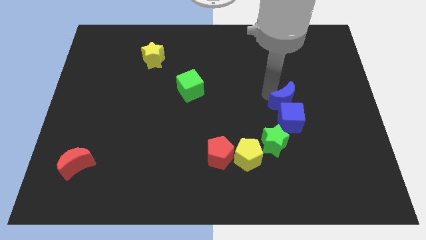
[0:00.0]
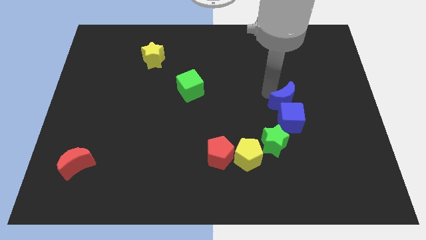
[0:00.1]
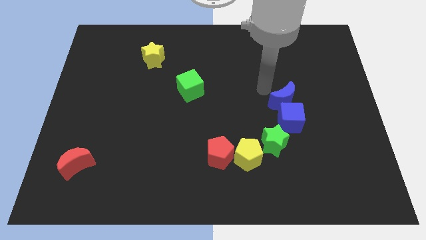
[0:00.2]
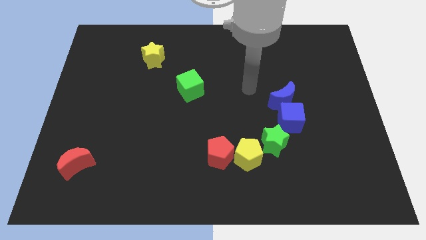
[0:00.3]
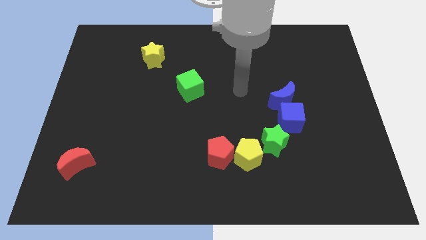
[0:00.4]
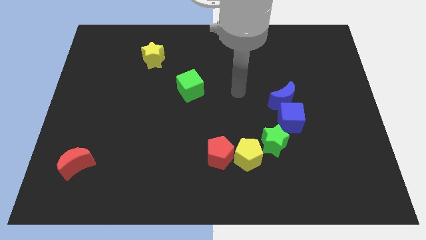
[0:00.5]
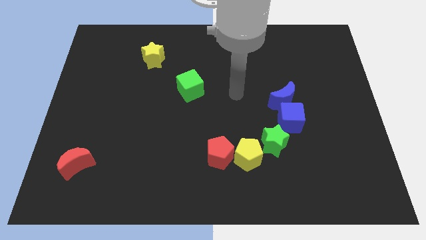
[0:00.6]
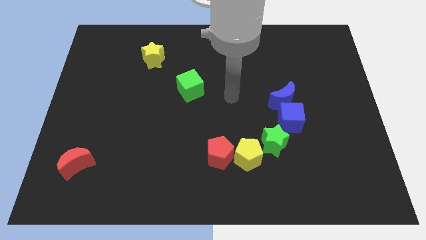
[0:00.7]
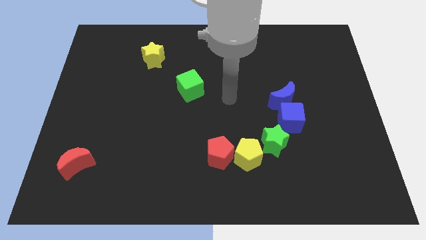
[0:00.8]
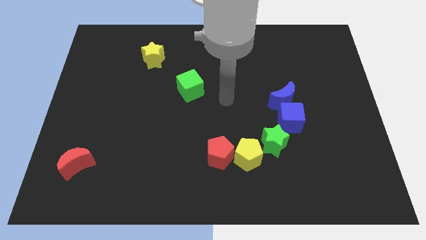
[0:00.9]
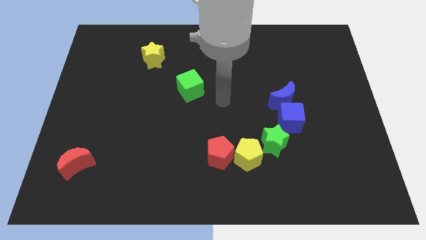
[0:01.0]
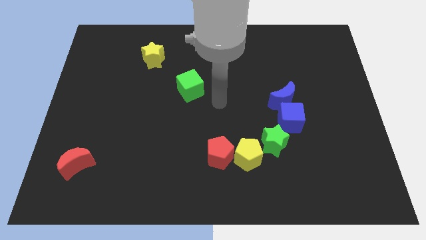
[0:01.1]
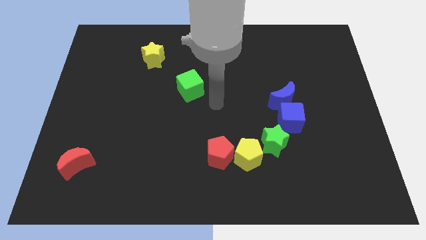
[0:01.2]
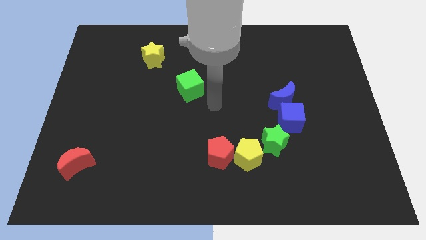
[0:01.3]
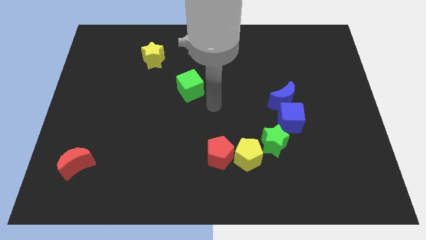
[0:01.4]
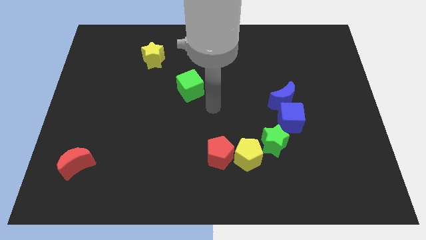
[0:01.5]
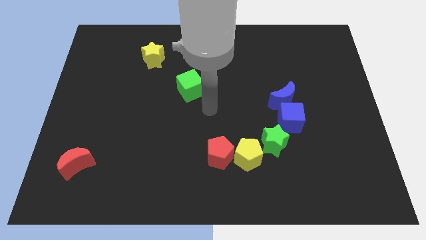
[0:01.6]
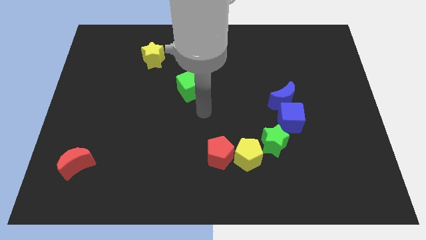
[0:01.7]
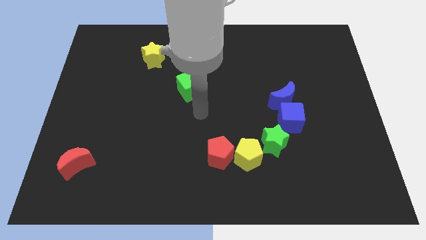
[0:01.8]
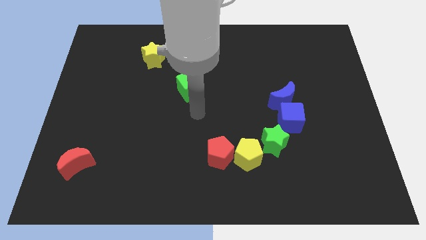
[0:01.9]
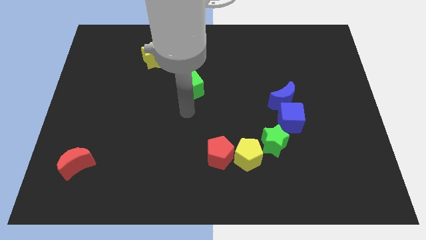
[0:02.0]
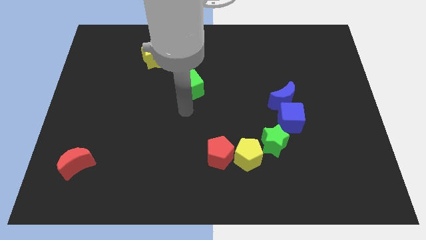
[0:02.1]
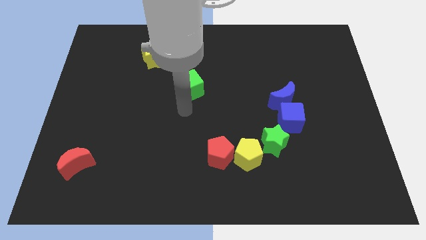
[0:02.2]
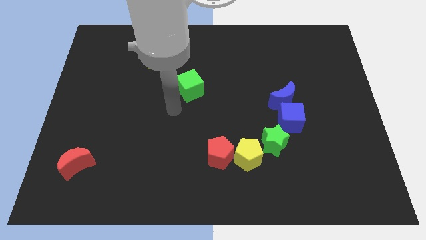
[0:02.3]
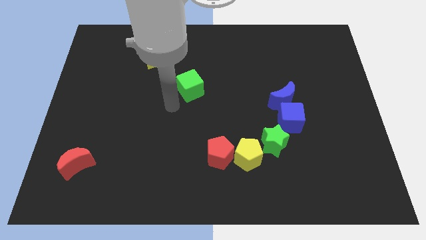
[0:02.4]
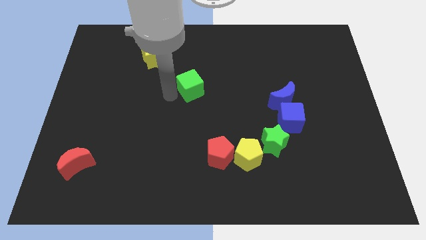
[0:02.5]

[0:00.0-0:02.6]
move your arm to the left of the green cube

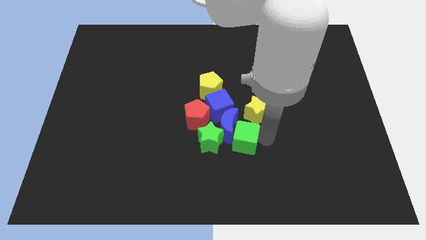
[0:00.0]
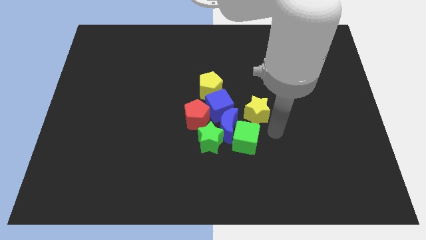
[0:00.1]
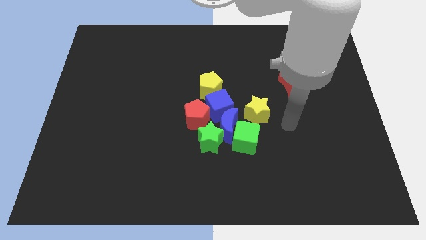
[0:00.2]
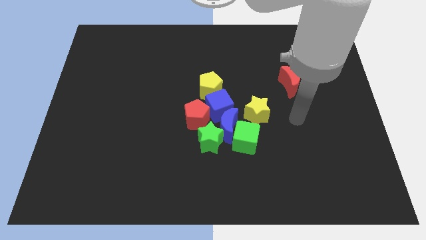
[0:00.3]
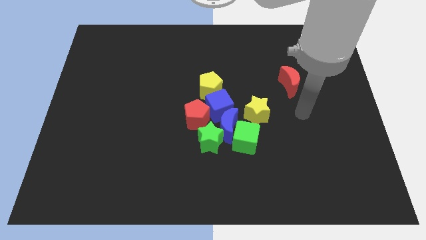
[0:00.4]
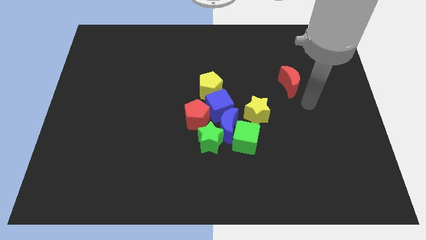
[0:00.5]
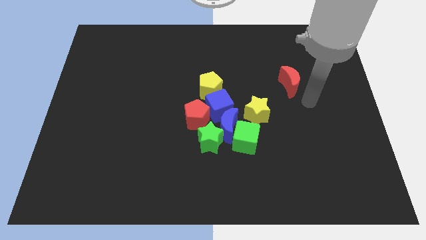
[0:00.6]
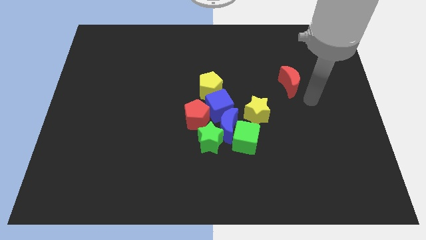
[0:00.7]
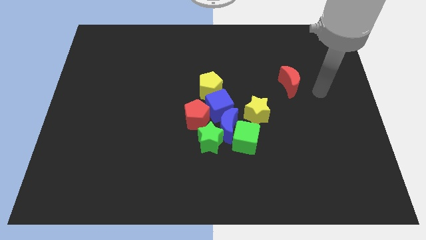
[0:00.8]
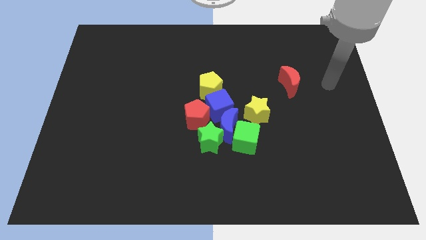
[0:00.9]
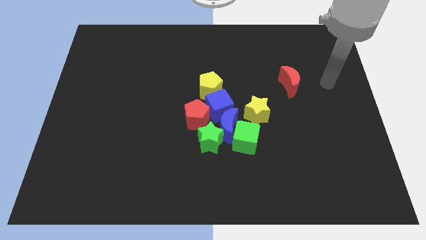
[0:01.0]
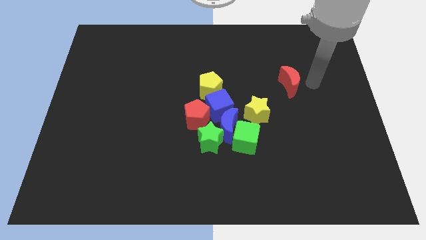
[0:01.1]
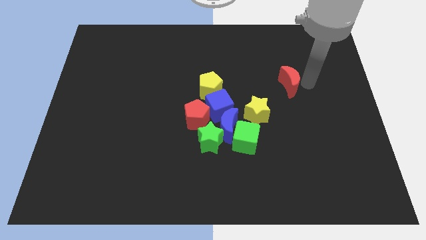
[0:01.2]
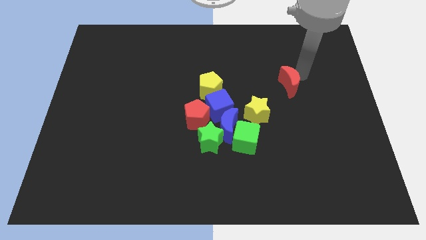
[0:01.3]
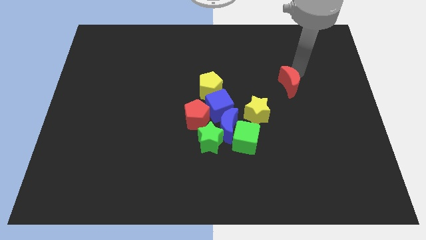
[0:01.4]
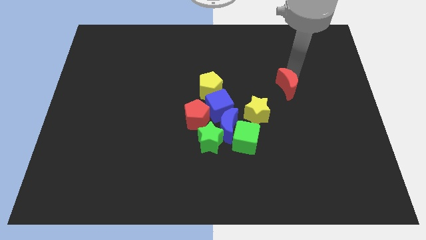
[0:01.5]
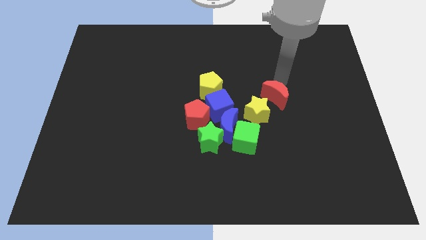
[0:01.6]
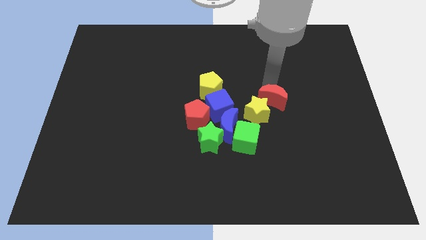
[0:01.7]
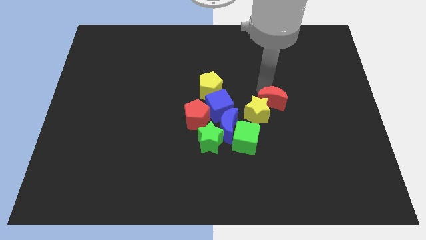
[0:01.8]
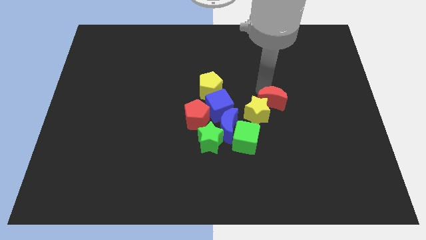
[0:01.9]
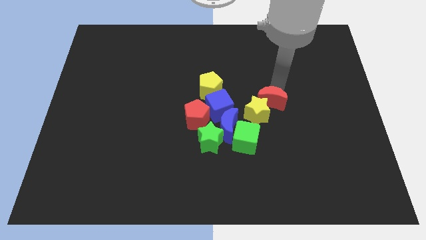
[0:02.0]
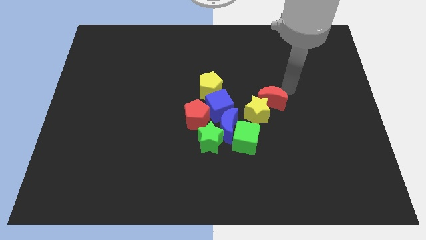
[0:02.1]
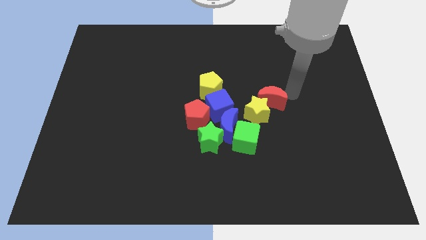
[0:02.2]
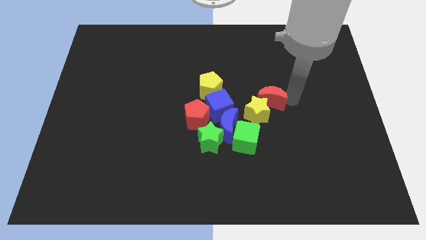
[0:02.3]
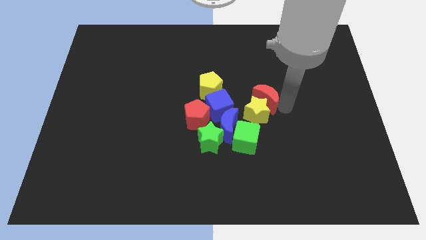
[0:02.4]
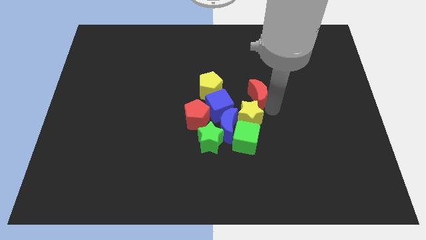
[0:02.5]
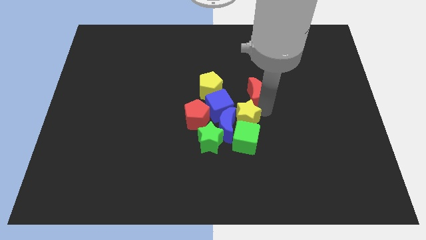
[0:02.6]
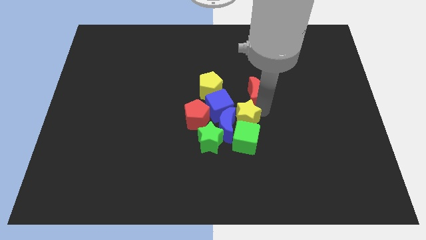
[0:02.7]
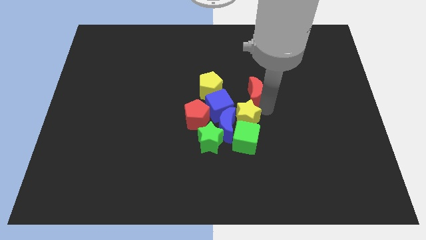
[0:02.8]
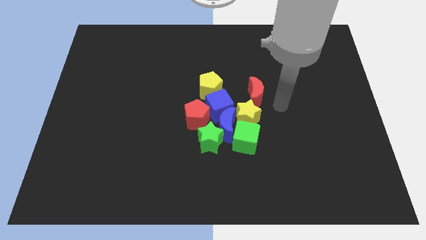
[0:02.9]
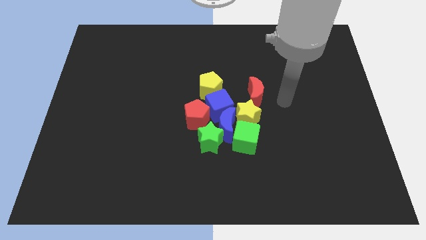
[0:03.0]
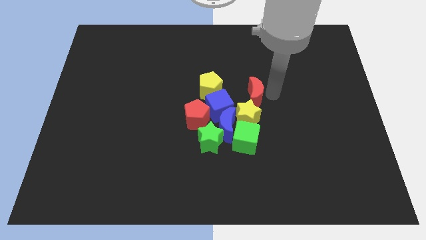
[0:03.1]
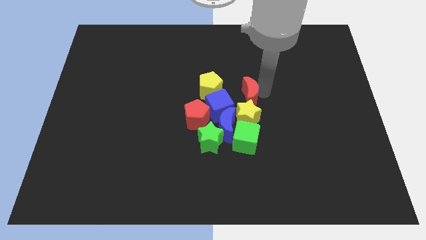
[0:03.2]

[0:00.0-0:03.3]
push red crescent above yellow star

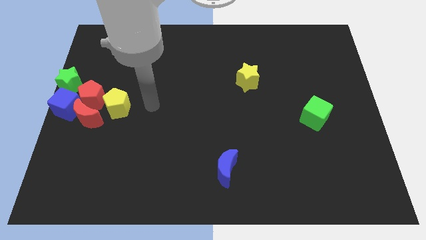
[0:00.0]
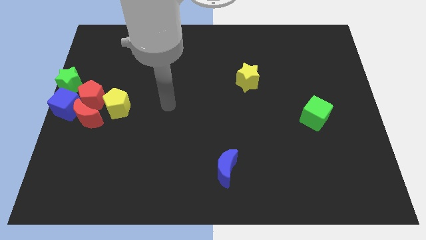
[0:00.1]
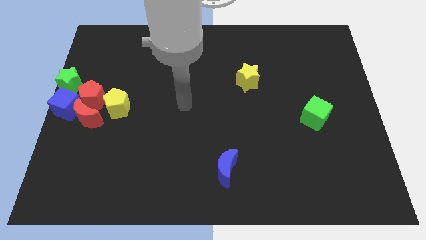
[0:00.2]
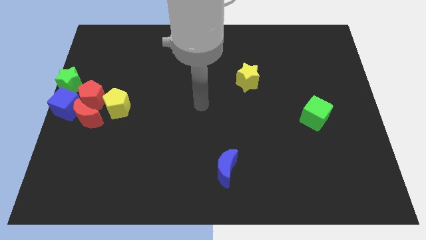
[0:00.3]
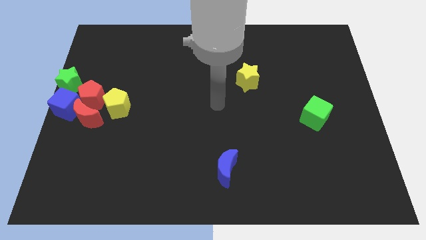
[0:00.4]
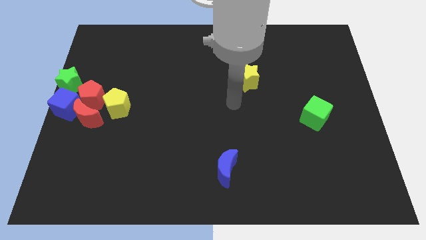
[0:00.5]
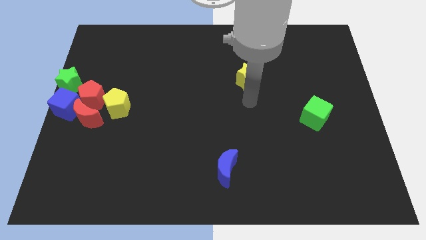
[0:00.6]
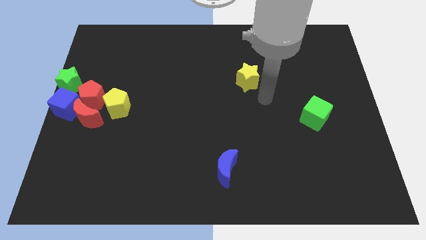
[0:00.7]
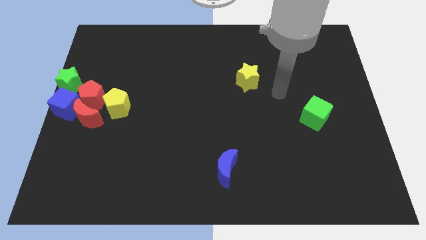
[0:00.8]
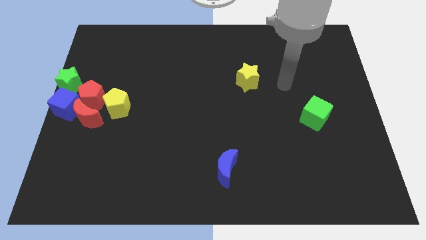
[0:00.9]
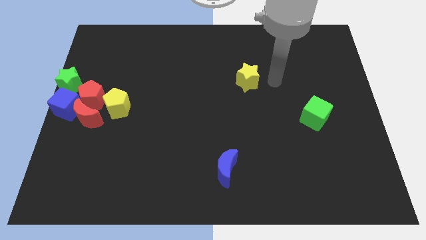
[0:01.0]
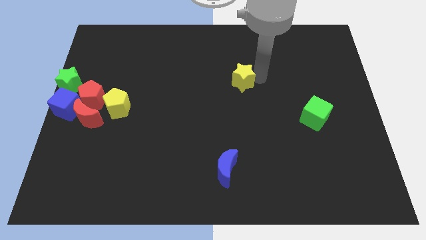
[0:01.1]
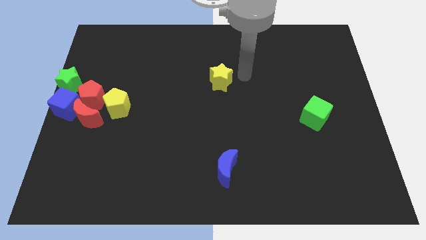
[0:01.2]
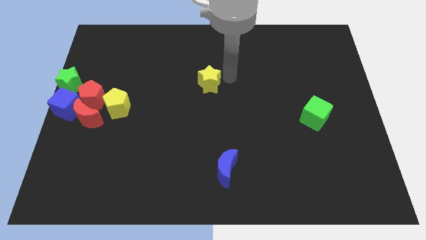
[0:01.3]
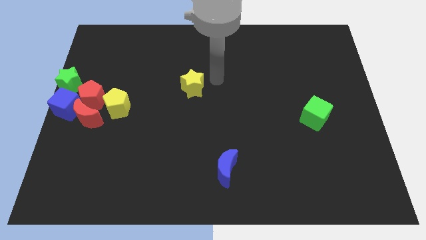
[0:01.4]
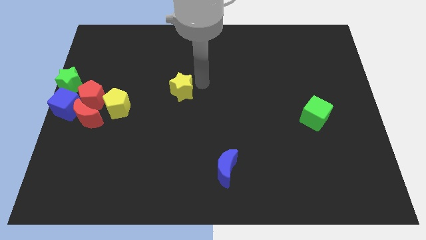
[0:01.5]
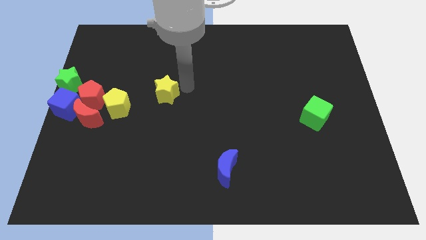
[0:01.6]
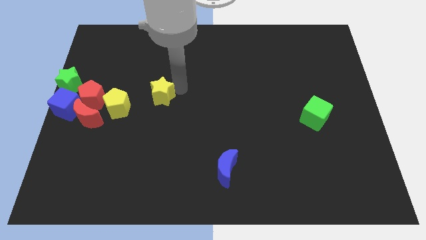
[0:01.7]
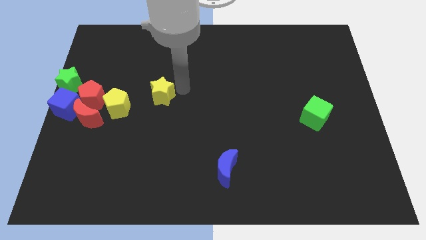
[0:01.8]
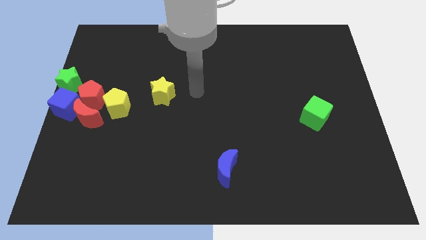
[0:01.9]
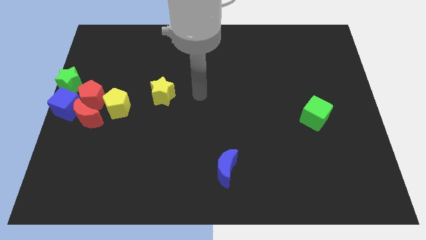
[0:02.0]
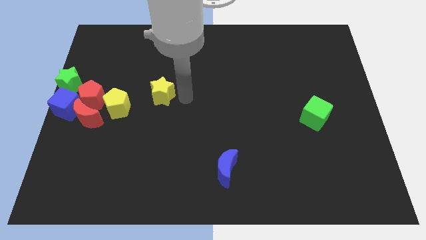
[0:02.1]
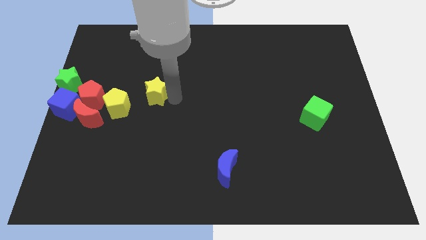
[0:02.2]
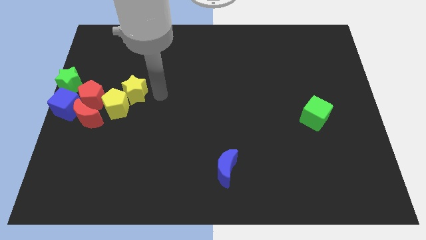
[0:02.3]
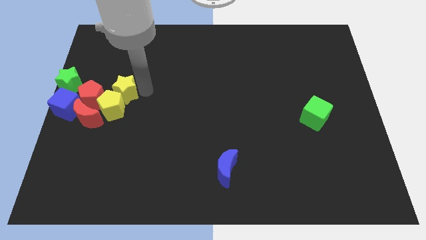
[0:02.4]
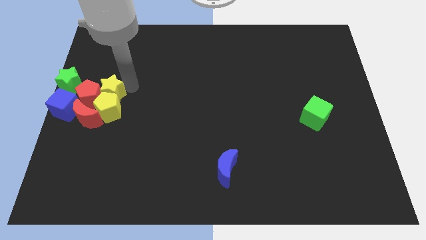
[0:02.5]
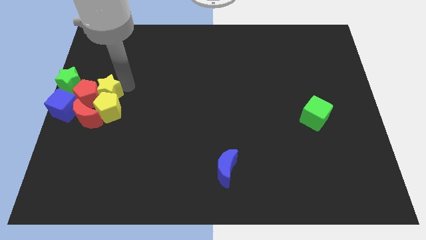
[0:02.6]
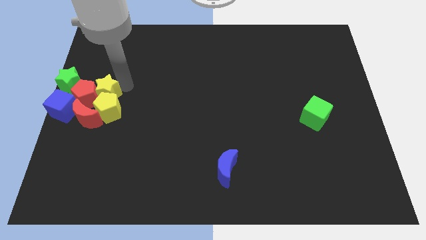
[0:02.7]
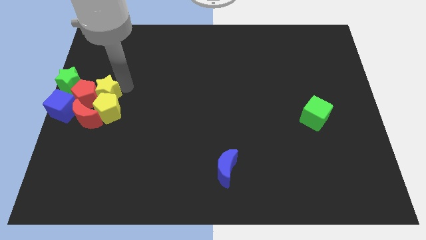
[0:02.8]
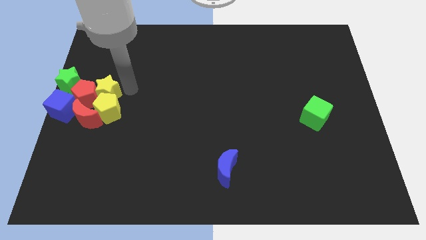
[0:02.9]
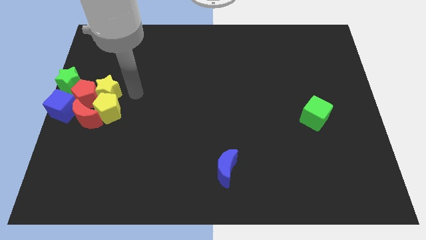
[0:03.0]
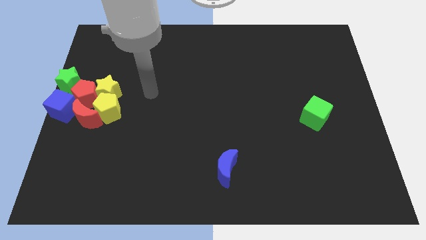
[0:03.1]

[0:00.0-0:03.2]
move the yellow star to the top of the yellow pentagon
